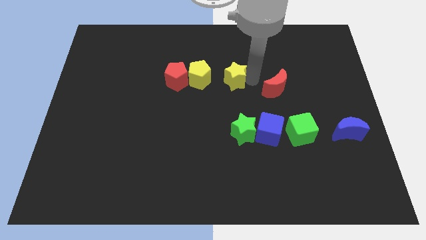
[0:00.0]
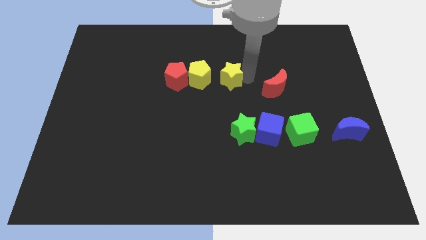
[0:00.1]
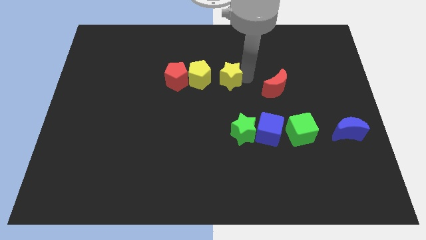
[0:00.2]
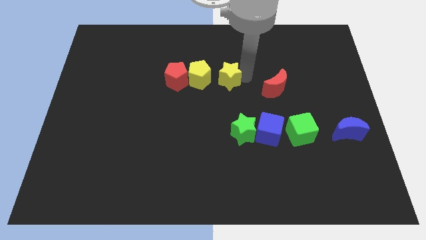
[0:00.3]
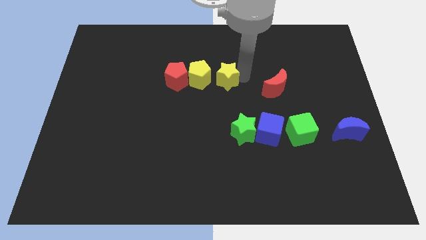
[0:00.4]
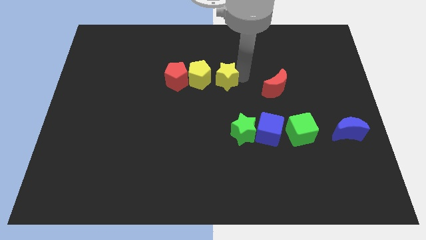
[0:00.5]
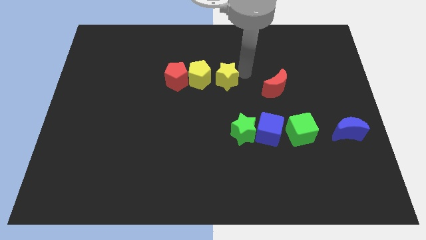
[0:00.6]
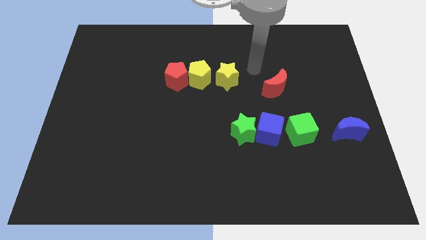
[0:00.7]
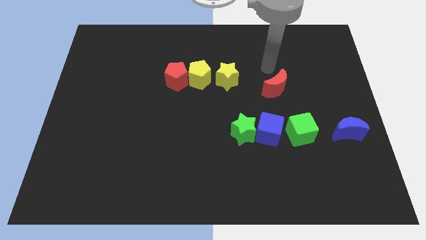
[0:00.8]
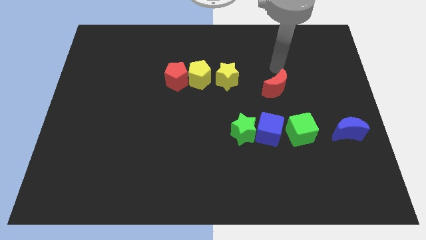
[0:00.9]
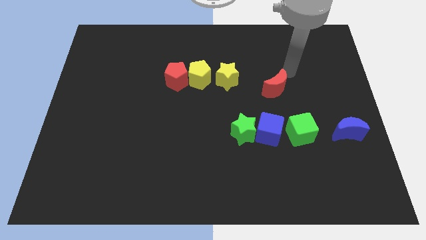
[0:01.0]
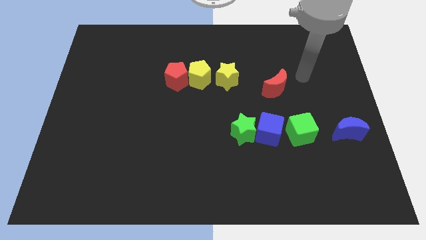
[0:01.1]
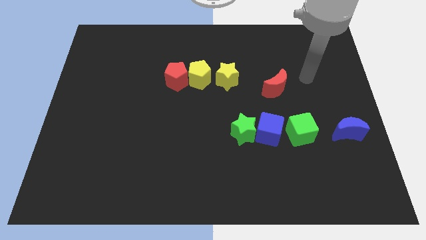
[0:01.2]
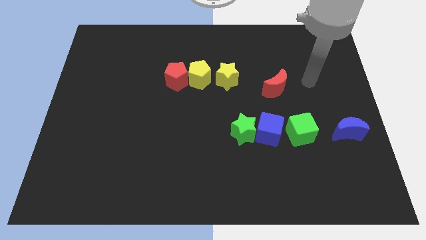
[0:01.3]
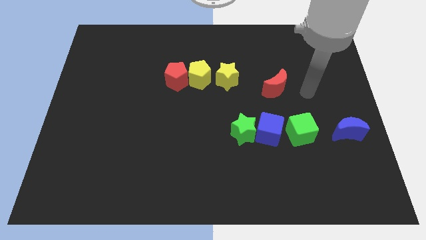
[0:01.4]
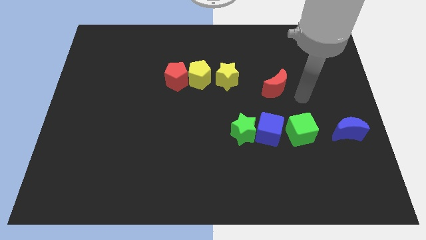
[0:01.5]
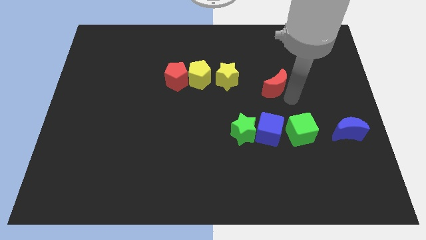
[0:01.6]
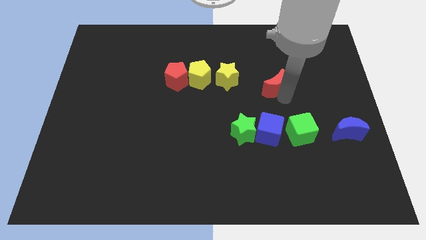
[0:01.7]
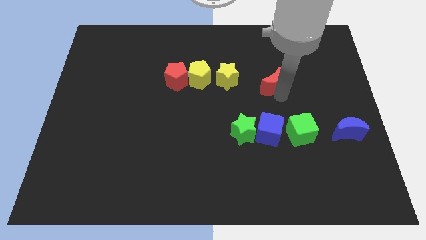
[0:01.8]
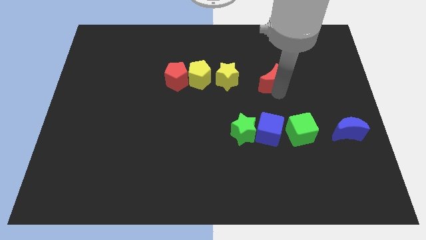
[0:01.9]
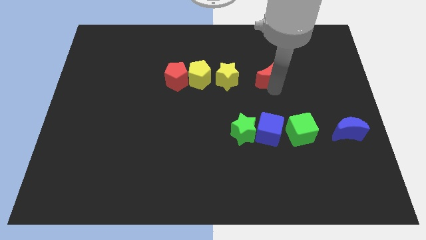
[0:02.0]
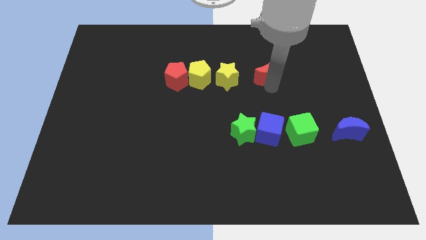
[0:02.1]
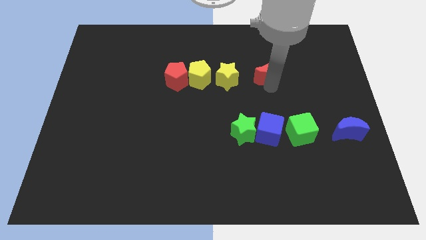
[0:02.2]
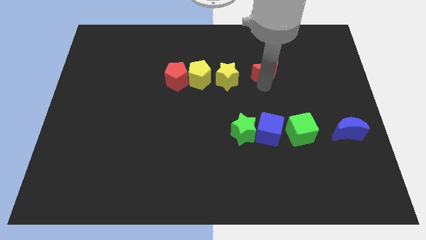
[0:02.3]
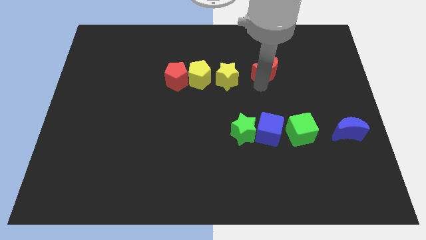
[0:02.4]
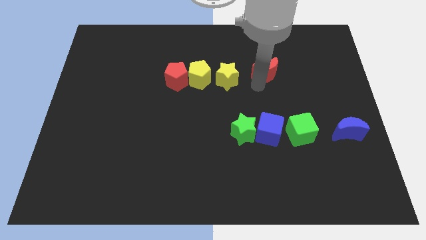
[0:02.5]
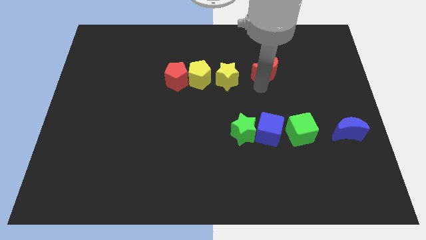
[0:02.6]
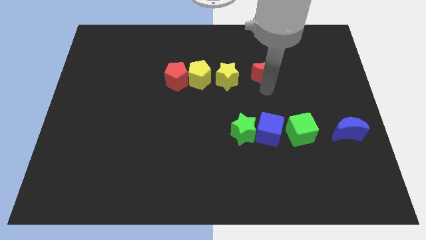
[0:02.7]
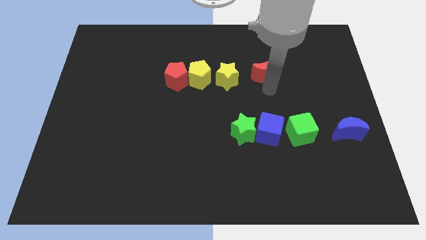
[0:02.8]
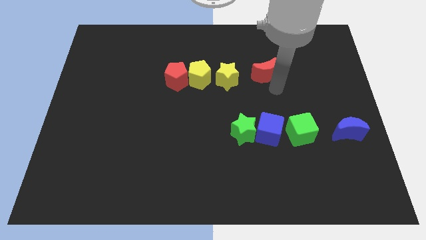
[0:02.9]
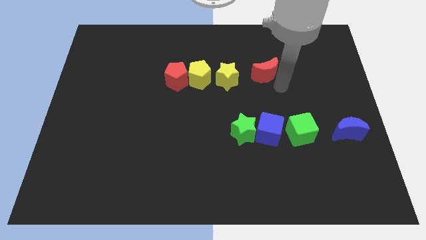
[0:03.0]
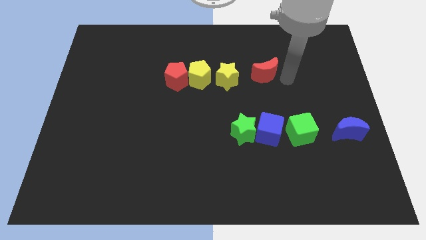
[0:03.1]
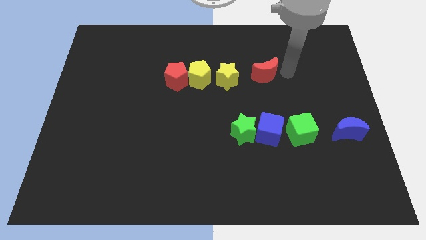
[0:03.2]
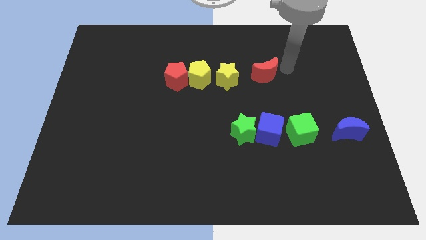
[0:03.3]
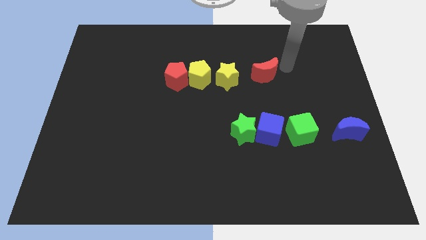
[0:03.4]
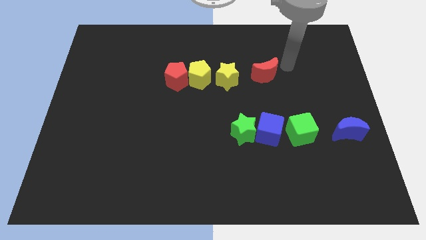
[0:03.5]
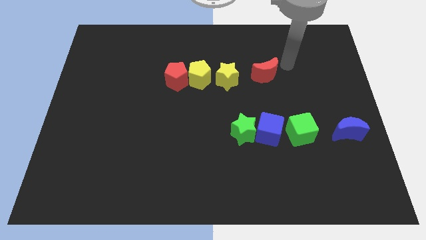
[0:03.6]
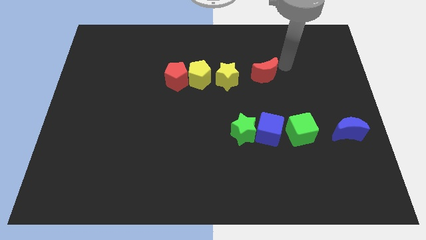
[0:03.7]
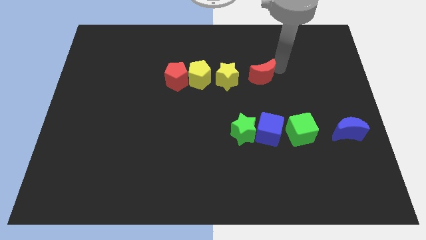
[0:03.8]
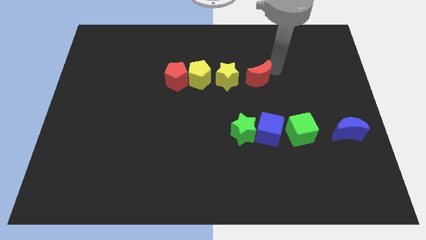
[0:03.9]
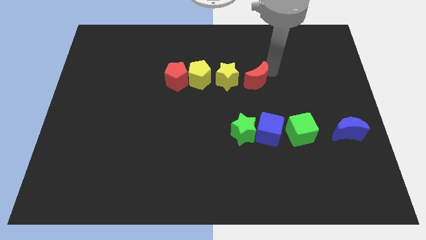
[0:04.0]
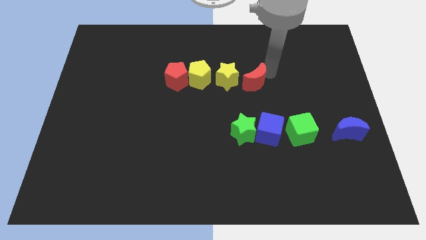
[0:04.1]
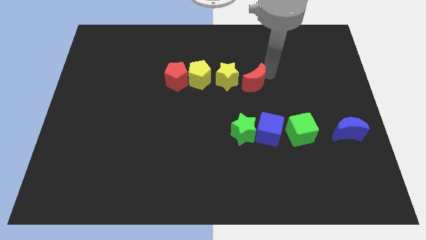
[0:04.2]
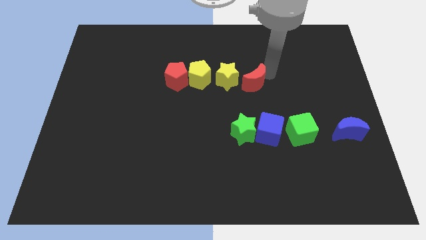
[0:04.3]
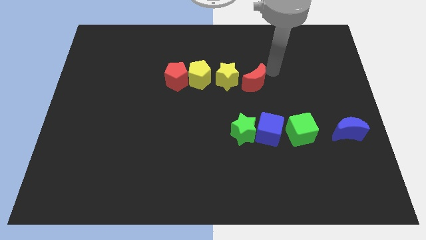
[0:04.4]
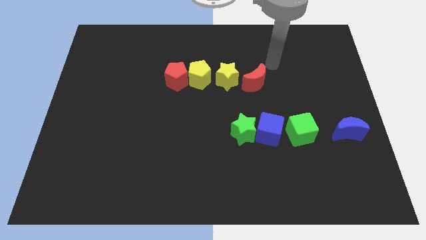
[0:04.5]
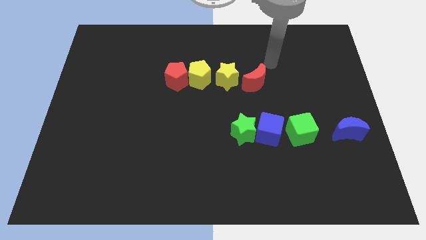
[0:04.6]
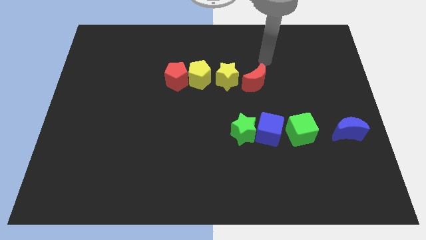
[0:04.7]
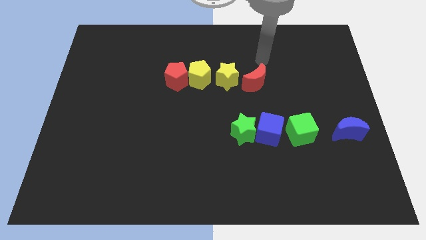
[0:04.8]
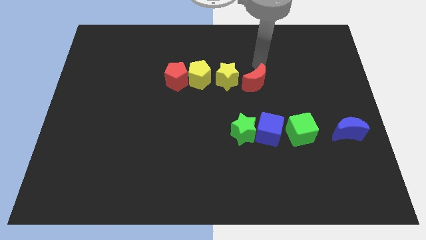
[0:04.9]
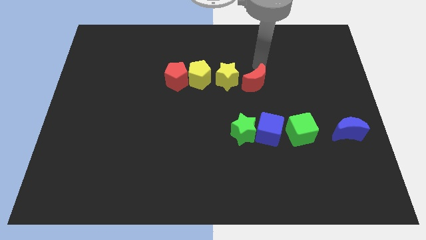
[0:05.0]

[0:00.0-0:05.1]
place the red moon to the right of the yellow star

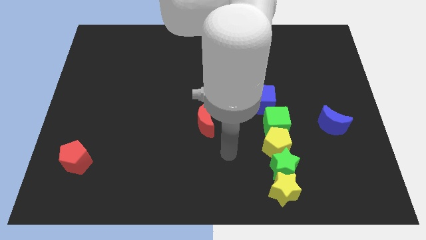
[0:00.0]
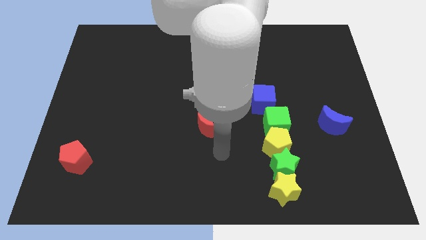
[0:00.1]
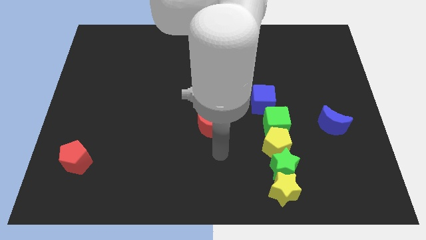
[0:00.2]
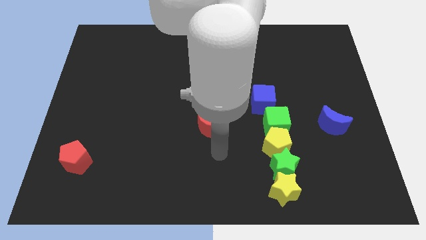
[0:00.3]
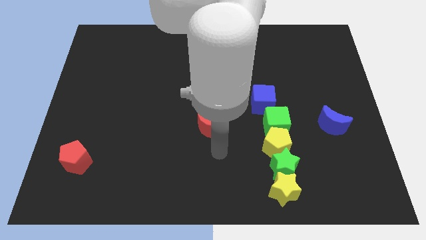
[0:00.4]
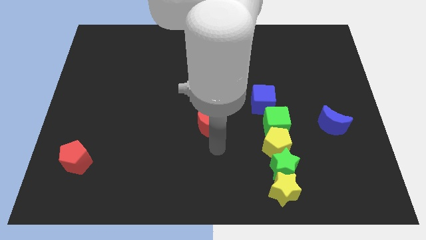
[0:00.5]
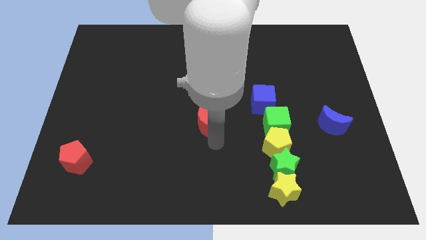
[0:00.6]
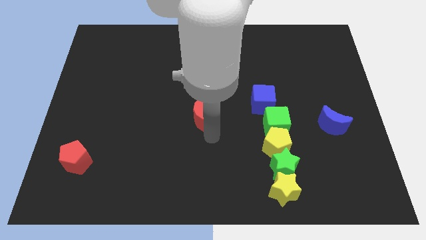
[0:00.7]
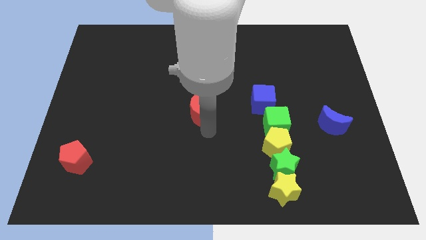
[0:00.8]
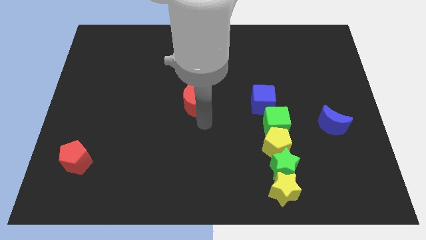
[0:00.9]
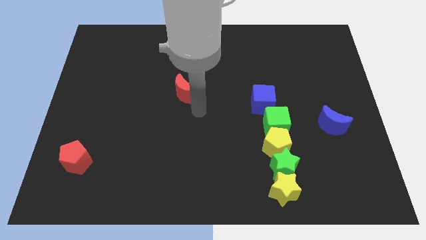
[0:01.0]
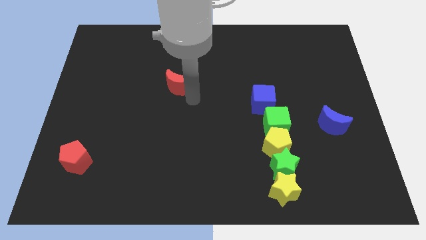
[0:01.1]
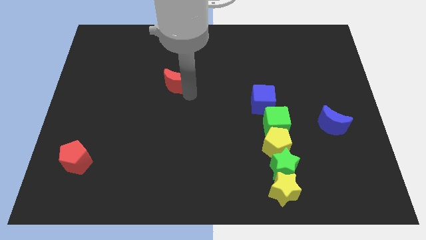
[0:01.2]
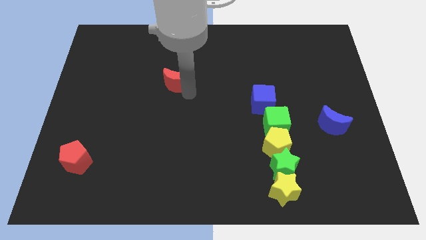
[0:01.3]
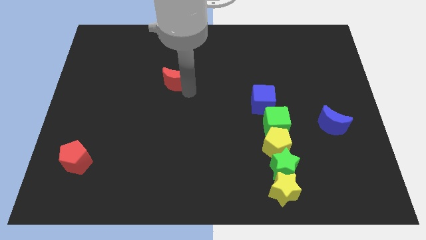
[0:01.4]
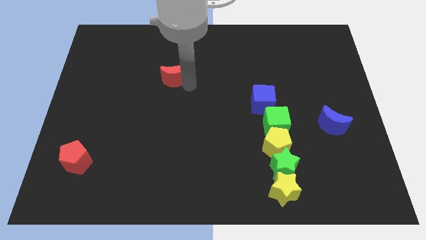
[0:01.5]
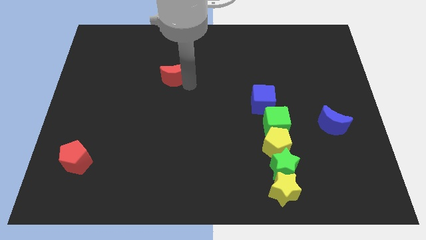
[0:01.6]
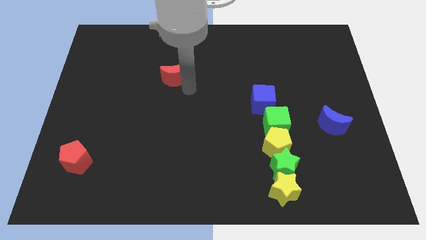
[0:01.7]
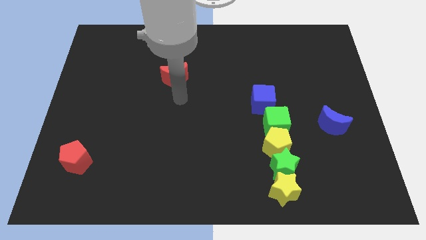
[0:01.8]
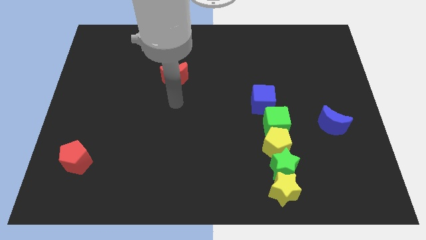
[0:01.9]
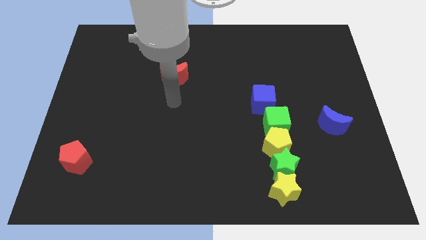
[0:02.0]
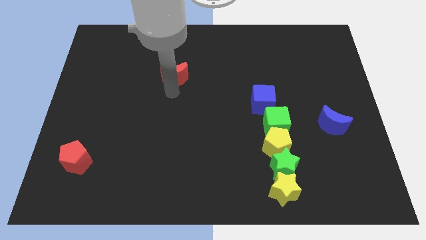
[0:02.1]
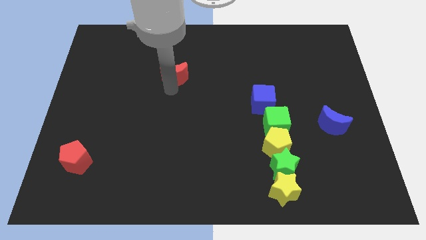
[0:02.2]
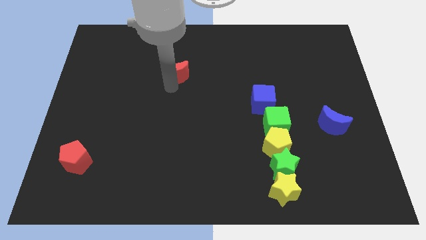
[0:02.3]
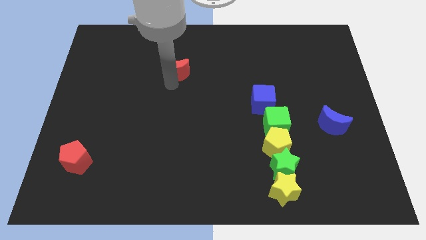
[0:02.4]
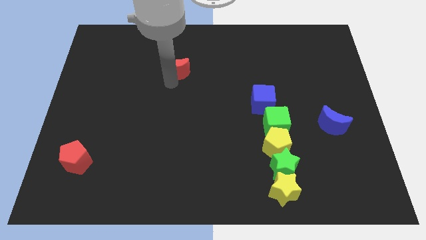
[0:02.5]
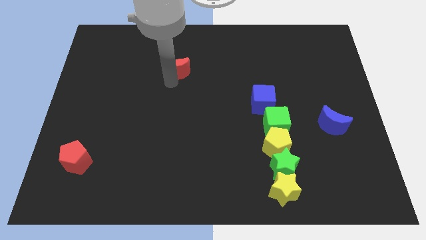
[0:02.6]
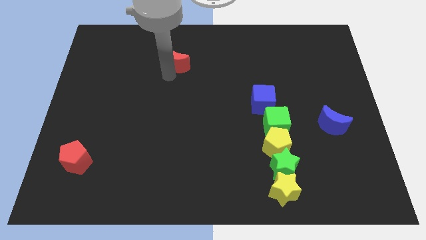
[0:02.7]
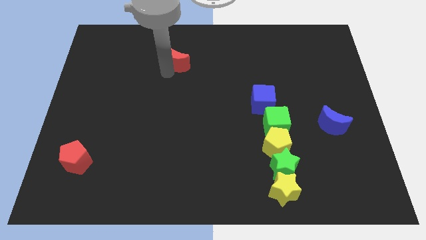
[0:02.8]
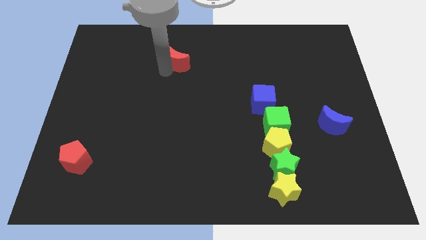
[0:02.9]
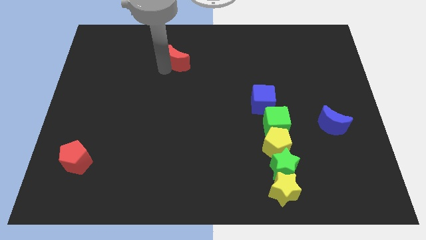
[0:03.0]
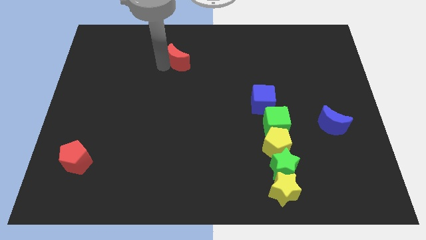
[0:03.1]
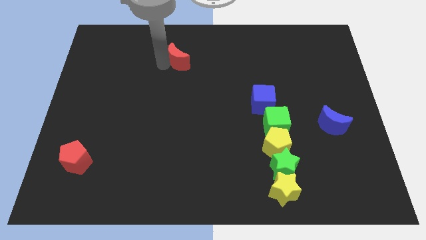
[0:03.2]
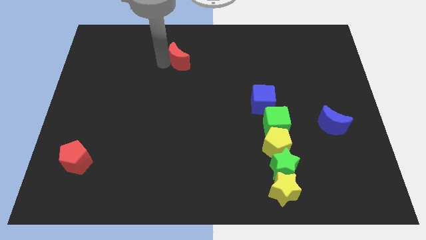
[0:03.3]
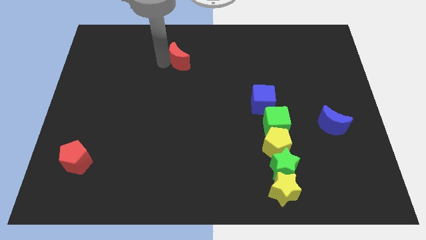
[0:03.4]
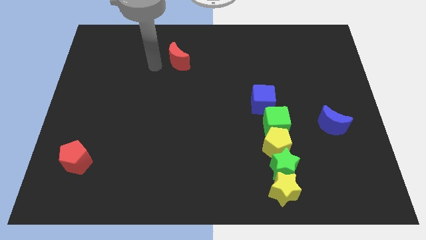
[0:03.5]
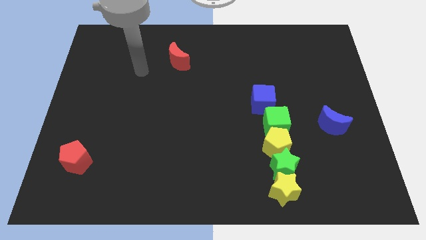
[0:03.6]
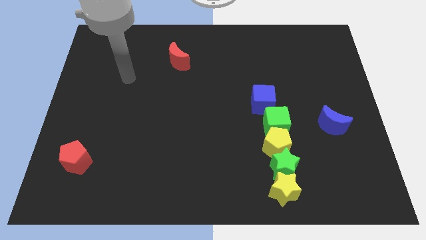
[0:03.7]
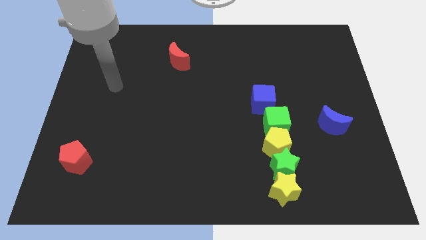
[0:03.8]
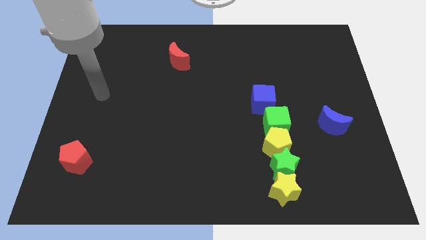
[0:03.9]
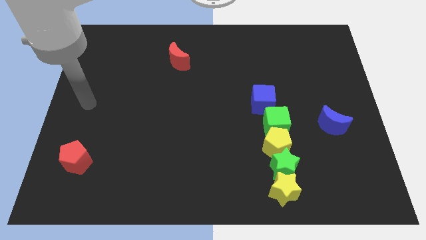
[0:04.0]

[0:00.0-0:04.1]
push red moon towards top center
